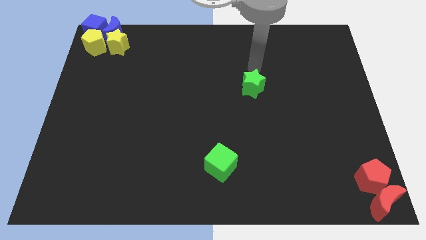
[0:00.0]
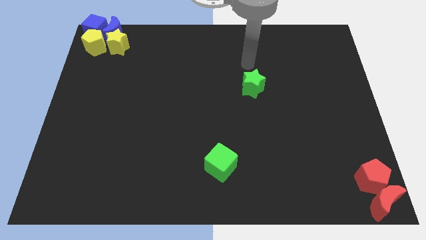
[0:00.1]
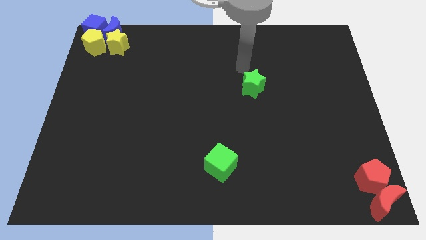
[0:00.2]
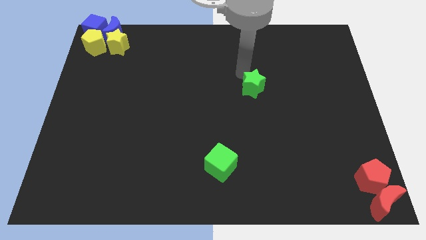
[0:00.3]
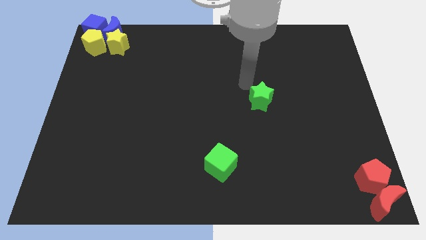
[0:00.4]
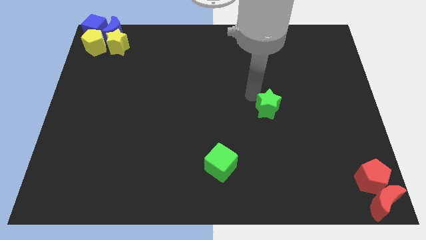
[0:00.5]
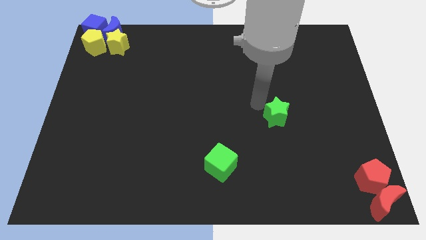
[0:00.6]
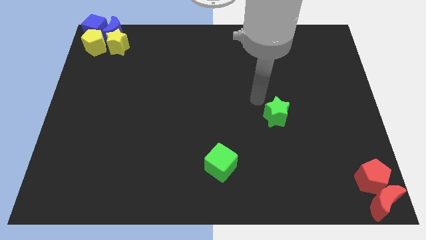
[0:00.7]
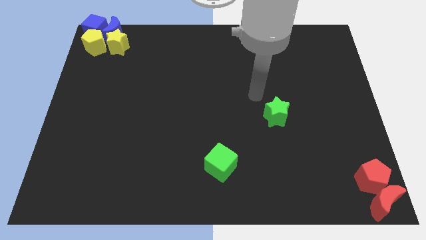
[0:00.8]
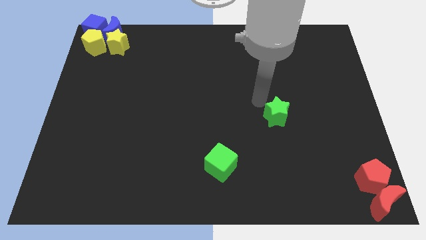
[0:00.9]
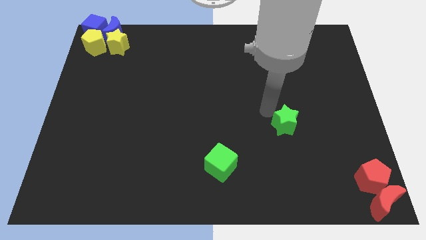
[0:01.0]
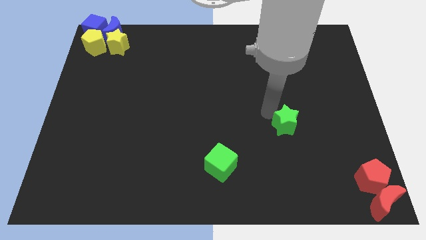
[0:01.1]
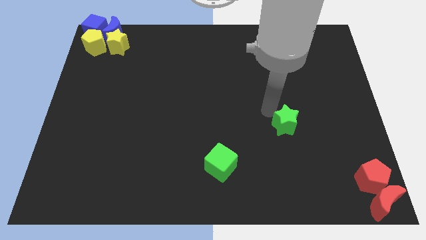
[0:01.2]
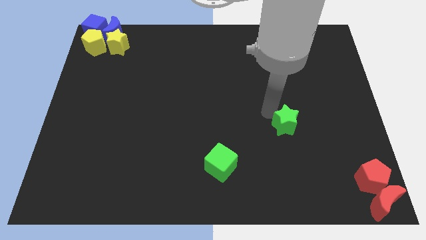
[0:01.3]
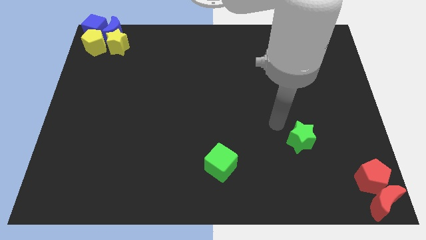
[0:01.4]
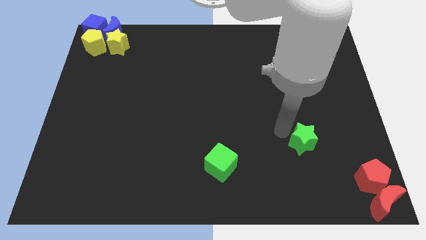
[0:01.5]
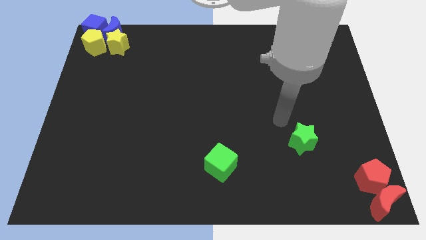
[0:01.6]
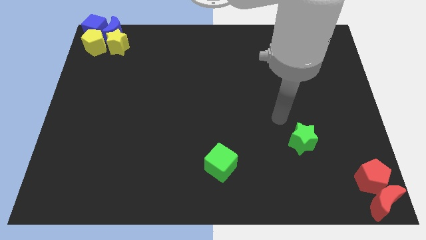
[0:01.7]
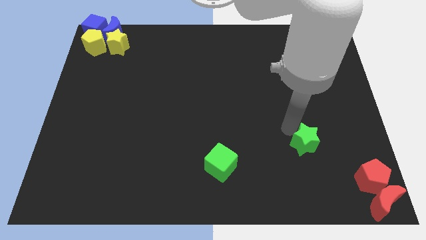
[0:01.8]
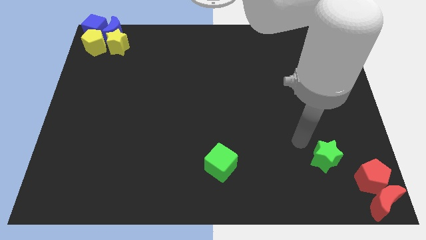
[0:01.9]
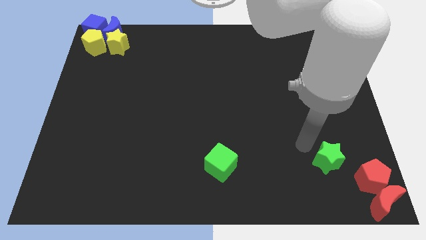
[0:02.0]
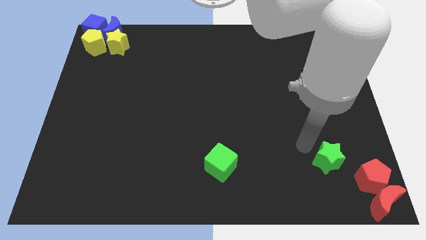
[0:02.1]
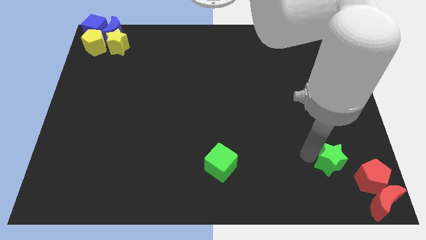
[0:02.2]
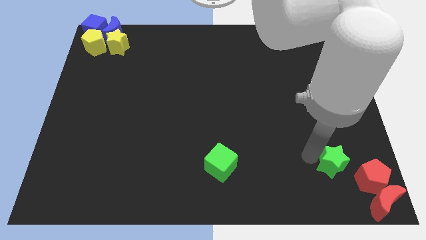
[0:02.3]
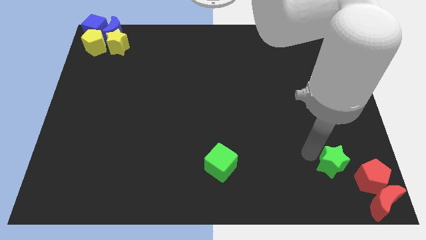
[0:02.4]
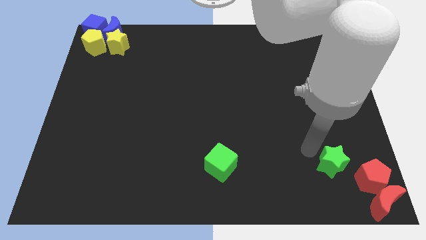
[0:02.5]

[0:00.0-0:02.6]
move the green star parallel to the right of the green cube

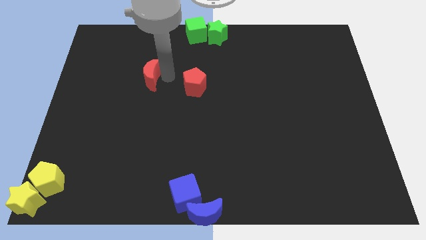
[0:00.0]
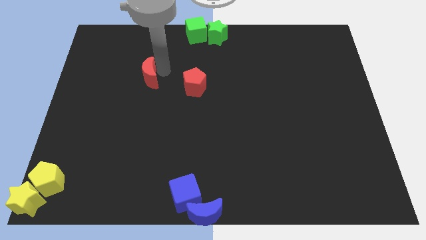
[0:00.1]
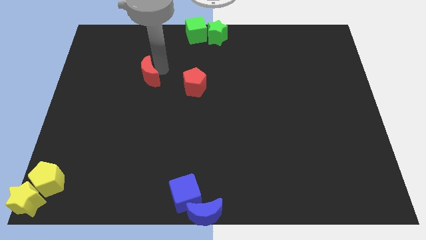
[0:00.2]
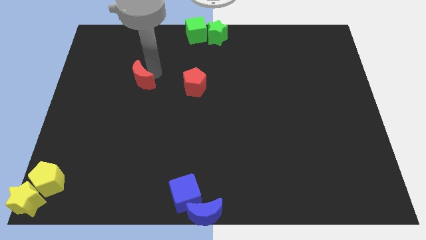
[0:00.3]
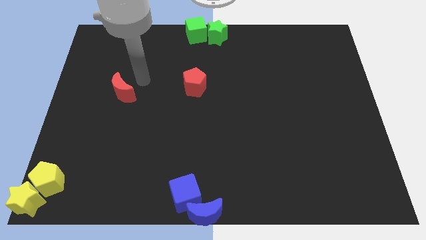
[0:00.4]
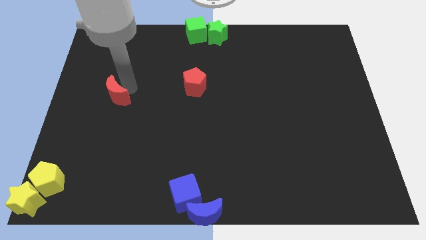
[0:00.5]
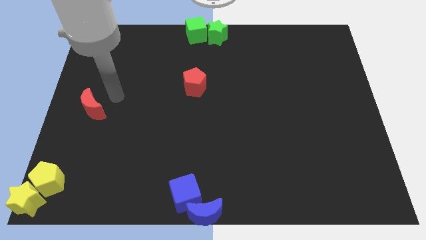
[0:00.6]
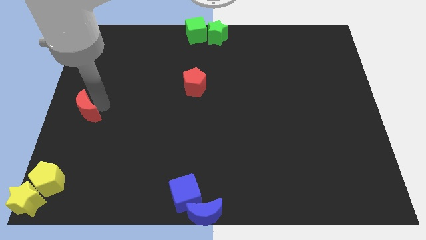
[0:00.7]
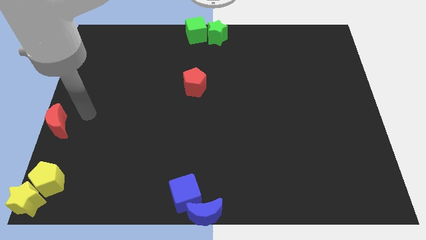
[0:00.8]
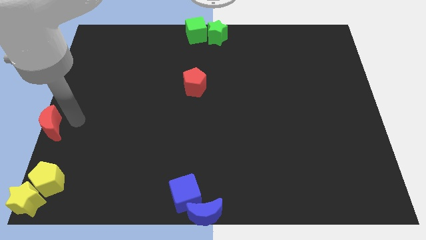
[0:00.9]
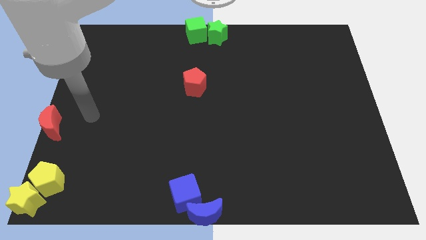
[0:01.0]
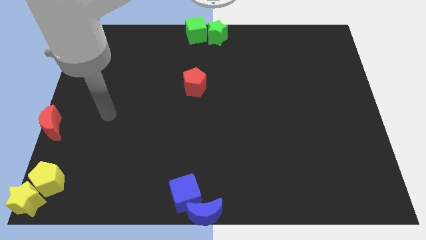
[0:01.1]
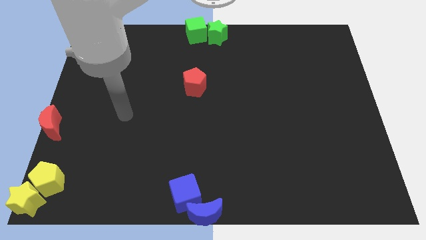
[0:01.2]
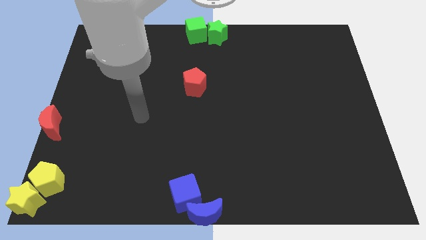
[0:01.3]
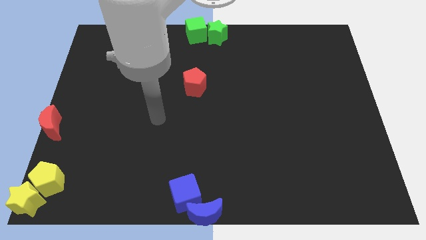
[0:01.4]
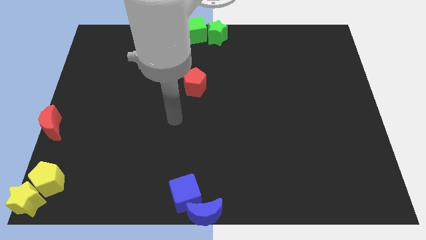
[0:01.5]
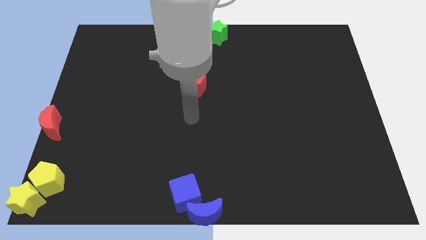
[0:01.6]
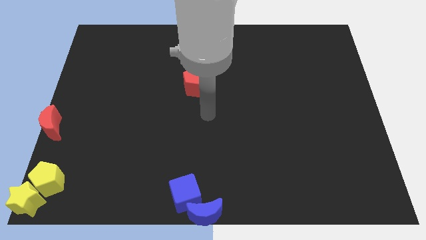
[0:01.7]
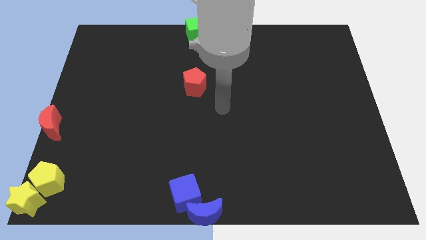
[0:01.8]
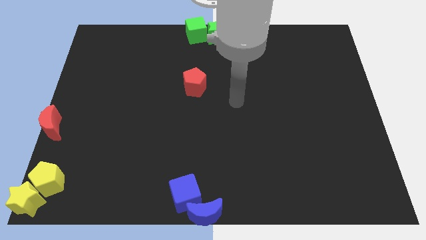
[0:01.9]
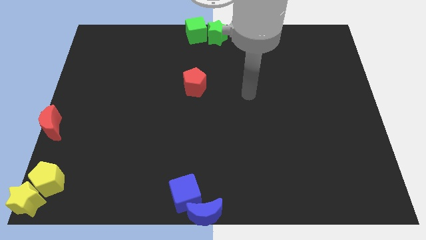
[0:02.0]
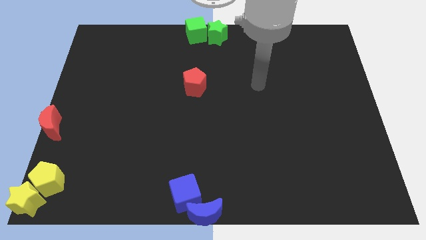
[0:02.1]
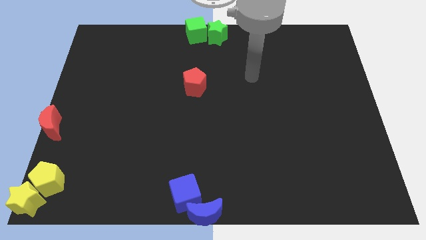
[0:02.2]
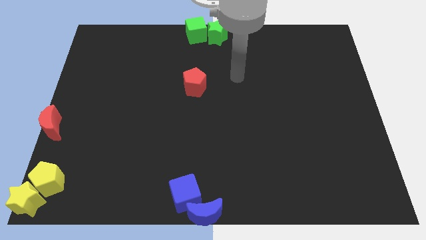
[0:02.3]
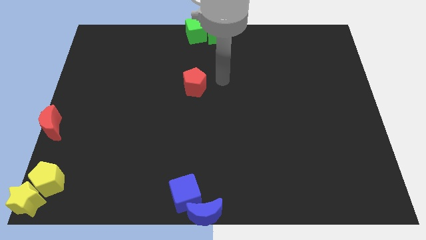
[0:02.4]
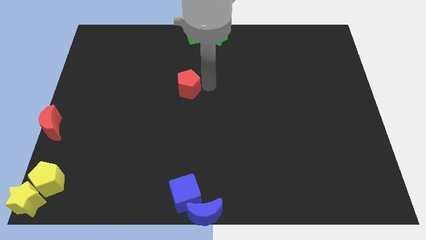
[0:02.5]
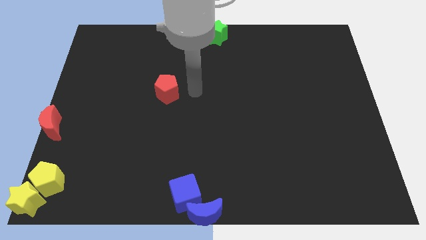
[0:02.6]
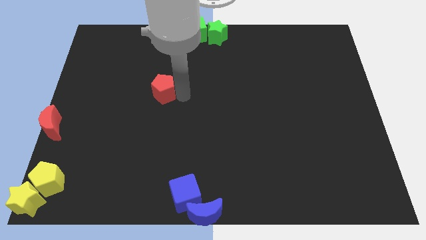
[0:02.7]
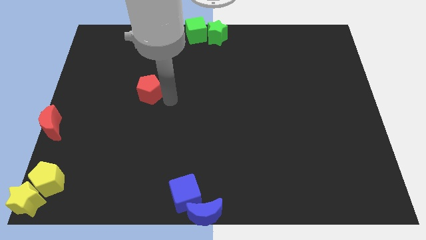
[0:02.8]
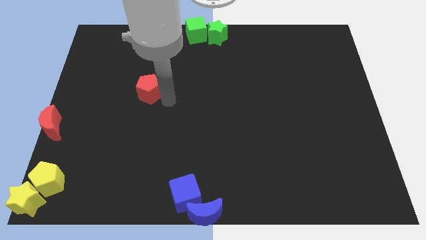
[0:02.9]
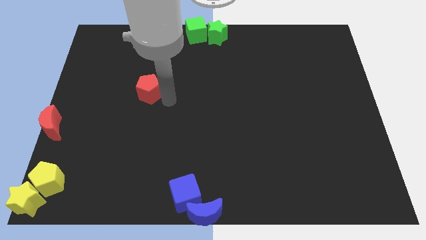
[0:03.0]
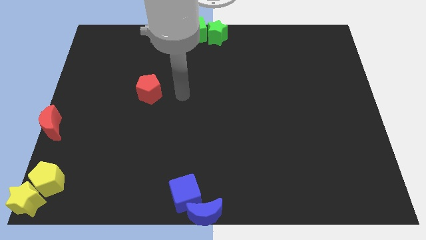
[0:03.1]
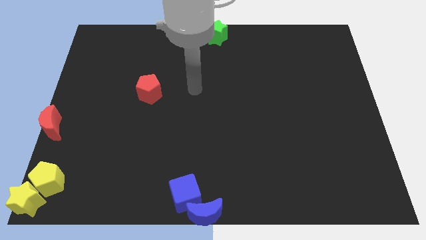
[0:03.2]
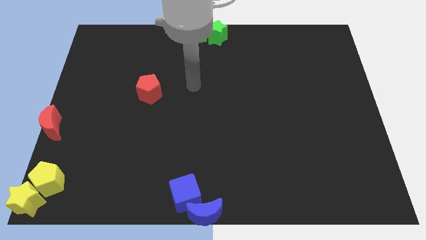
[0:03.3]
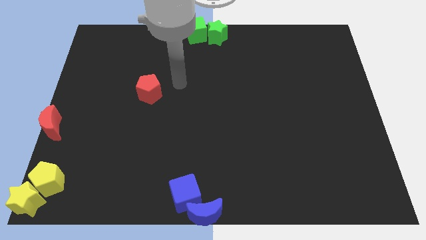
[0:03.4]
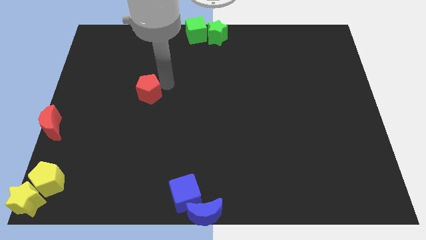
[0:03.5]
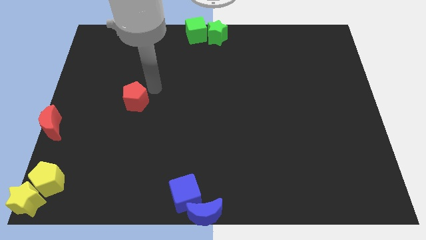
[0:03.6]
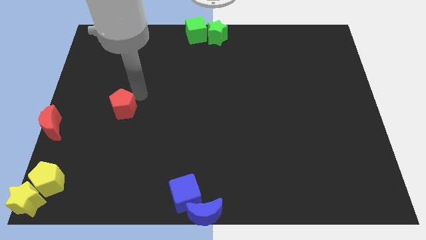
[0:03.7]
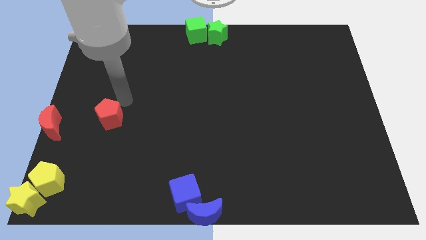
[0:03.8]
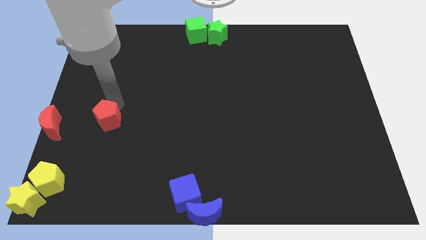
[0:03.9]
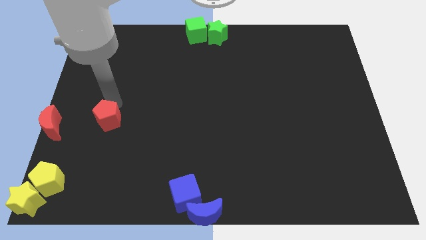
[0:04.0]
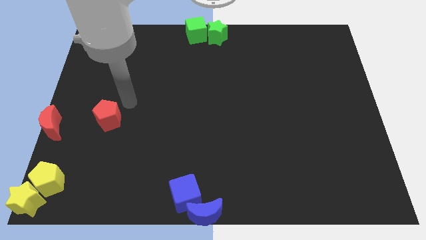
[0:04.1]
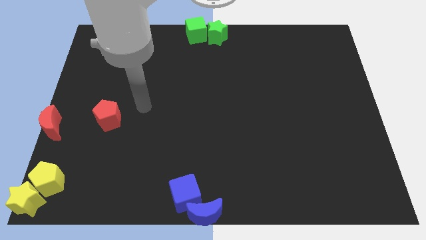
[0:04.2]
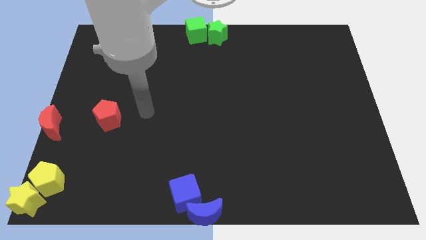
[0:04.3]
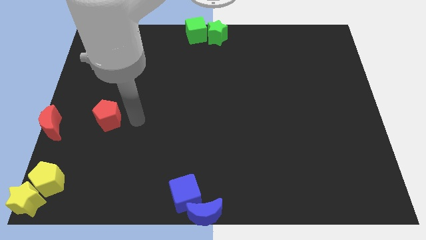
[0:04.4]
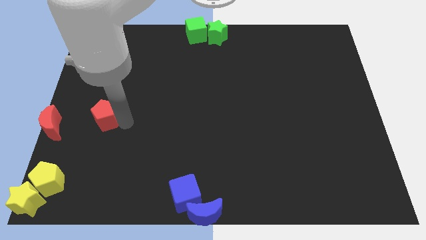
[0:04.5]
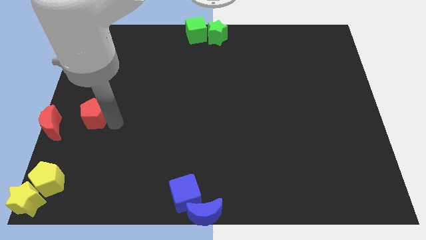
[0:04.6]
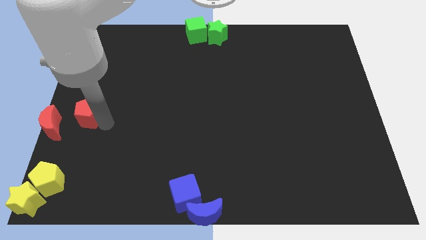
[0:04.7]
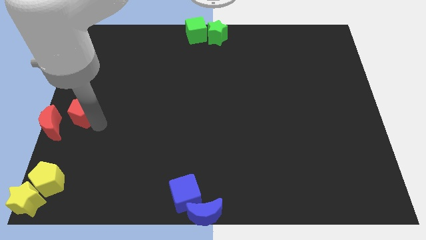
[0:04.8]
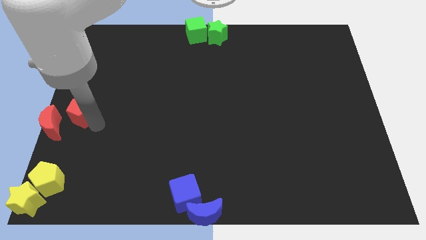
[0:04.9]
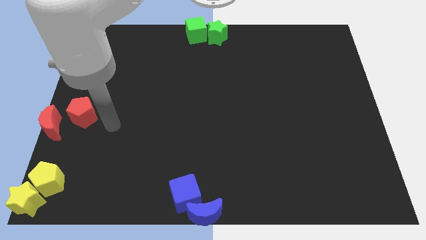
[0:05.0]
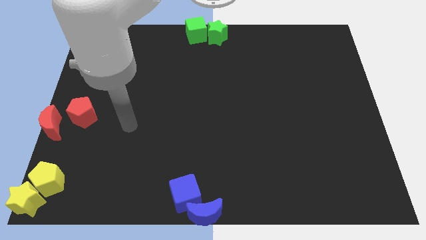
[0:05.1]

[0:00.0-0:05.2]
drag the red pentagon and red crescent towards center left corner of the board

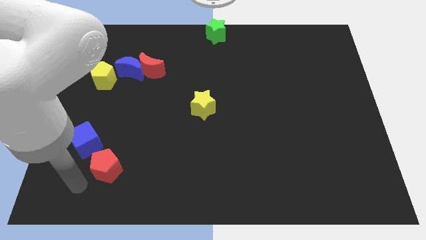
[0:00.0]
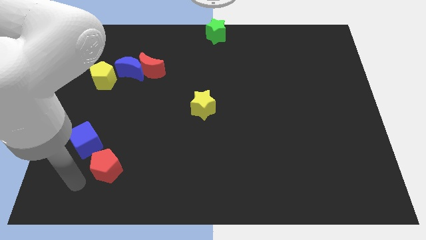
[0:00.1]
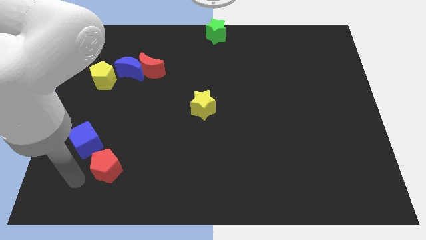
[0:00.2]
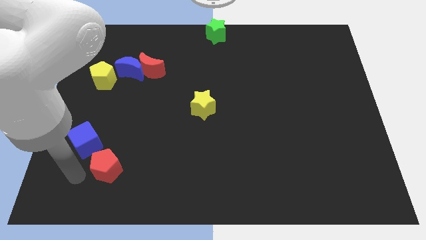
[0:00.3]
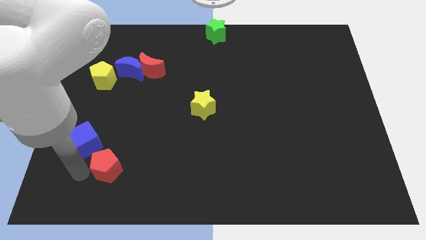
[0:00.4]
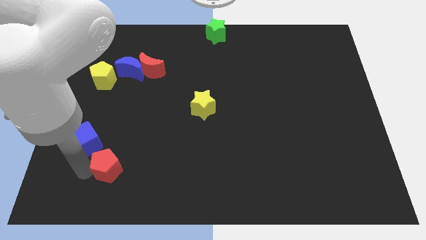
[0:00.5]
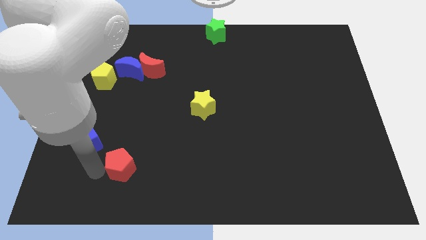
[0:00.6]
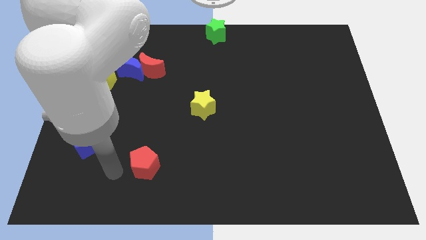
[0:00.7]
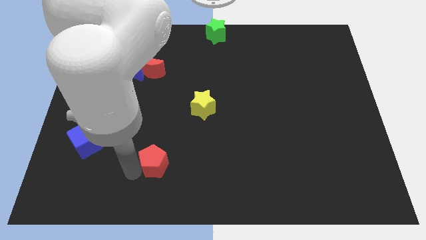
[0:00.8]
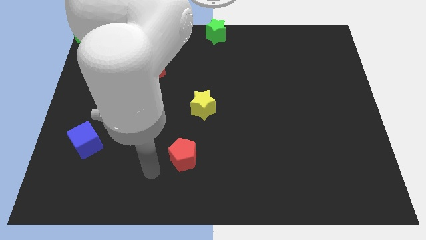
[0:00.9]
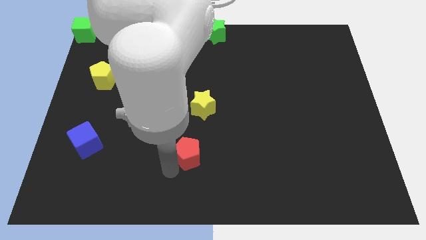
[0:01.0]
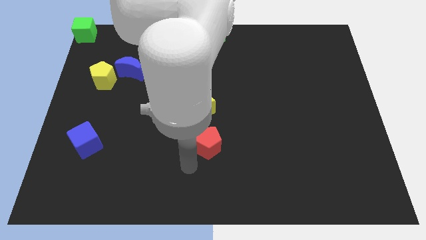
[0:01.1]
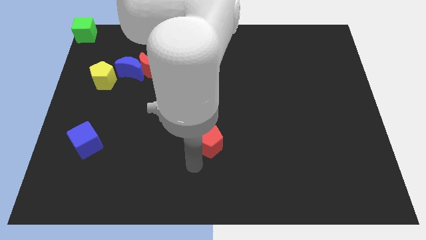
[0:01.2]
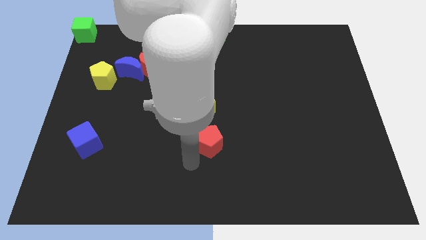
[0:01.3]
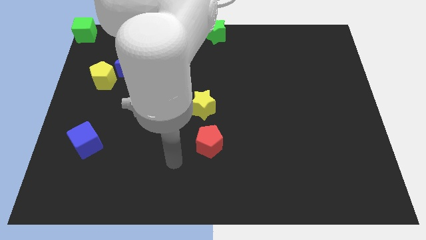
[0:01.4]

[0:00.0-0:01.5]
push the red pentagon to the bottom side of the yellow star
